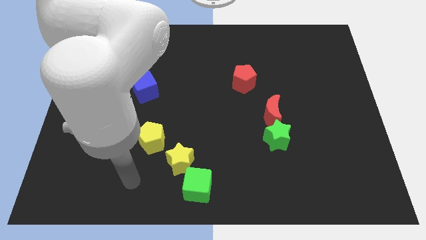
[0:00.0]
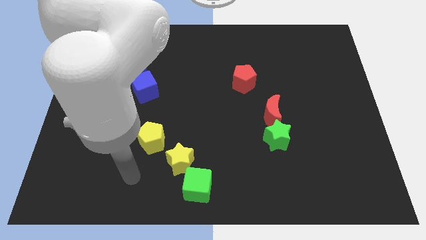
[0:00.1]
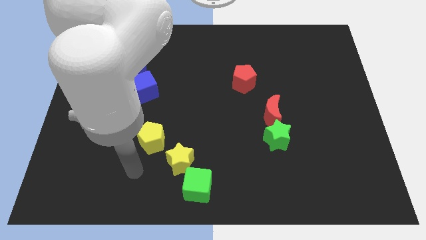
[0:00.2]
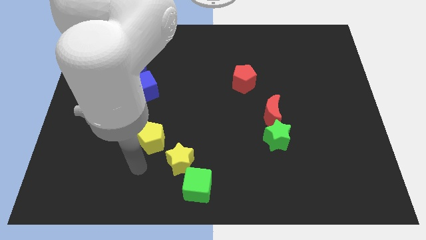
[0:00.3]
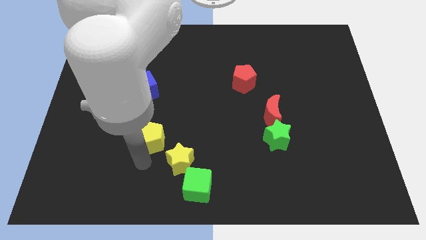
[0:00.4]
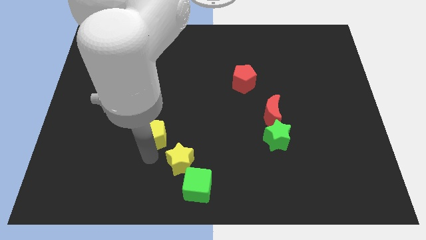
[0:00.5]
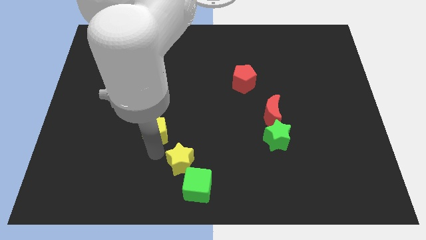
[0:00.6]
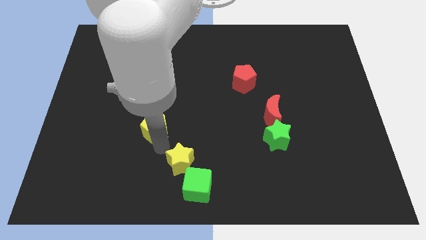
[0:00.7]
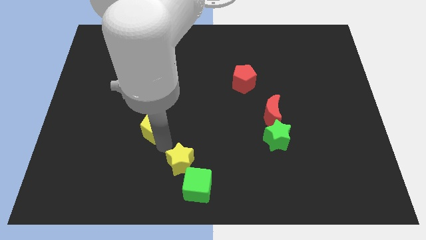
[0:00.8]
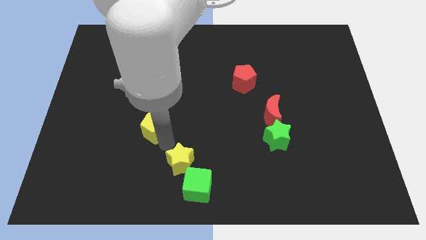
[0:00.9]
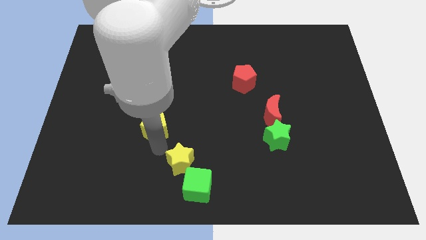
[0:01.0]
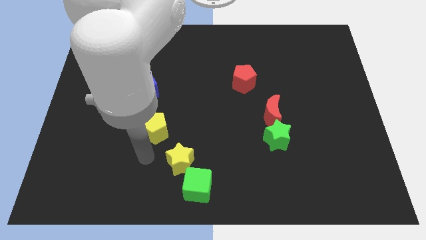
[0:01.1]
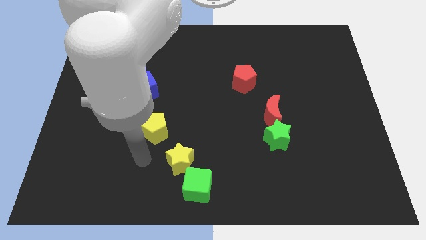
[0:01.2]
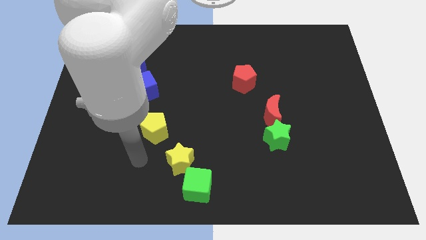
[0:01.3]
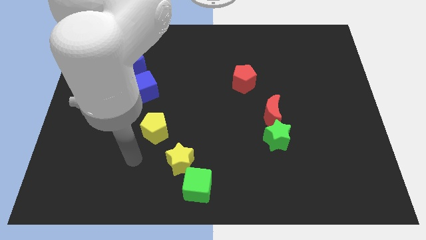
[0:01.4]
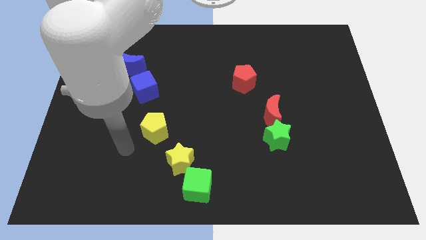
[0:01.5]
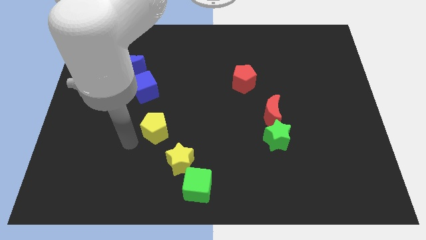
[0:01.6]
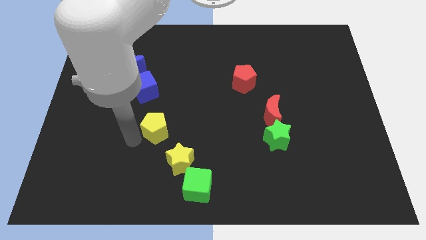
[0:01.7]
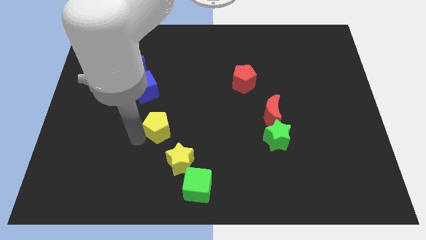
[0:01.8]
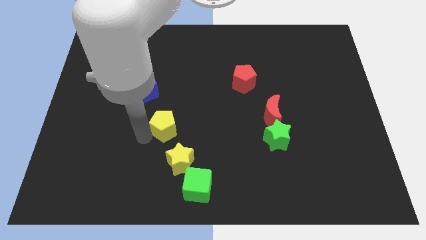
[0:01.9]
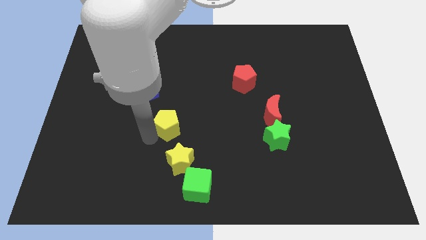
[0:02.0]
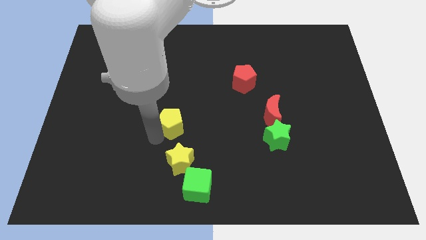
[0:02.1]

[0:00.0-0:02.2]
push the yellow pentagon up slightly to form a diagonal line with the other blocks

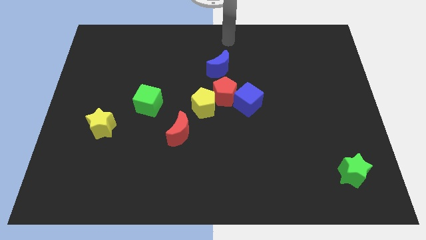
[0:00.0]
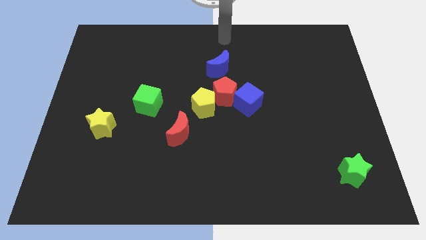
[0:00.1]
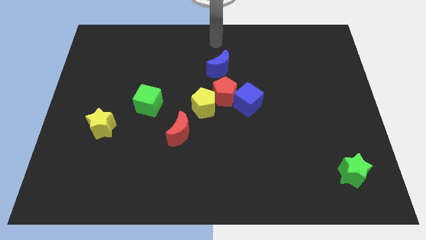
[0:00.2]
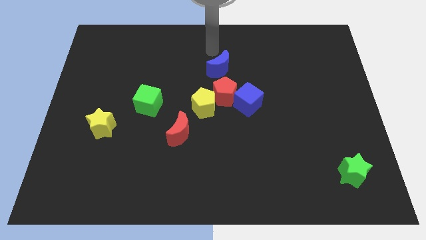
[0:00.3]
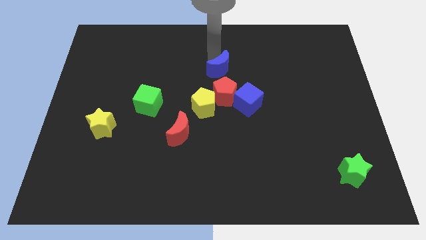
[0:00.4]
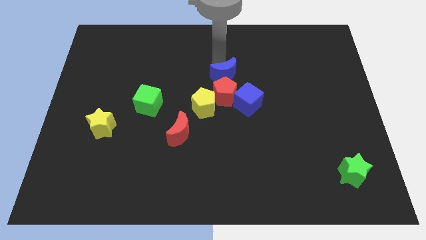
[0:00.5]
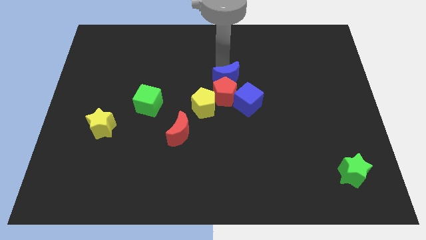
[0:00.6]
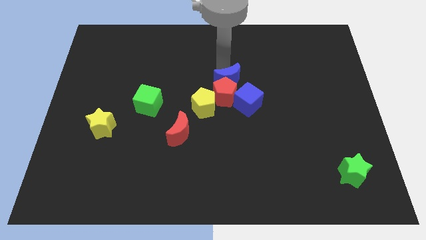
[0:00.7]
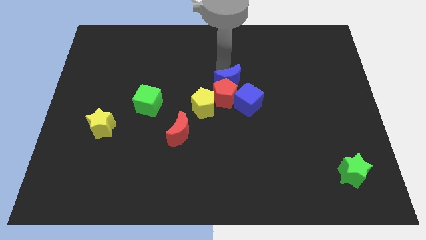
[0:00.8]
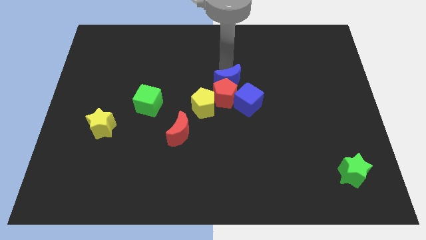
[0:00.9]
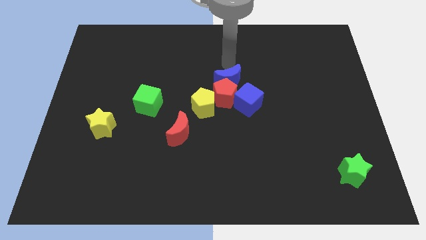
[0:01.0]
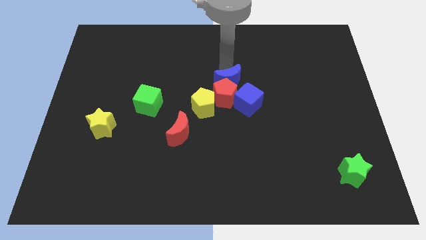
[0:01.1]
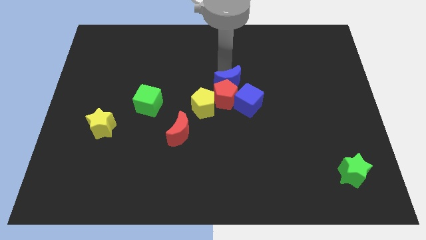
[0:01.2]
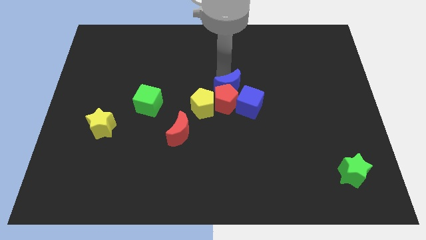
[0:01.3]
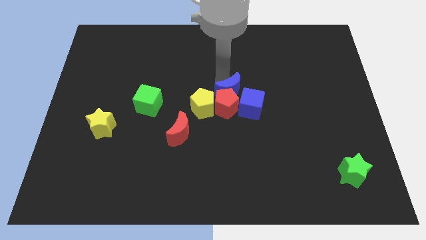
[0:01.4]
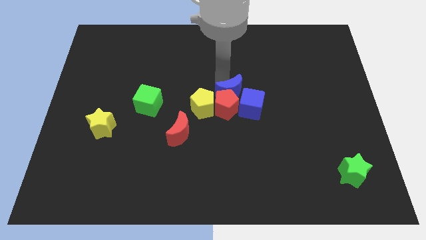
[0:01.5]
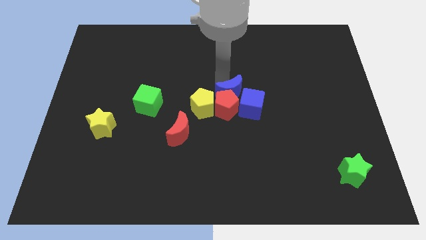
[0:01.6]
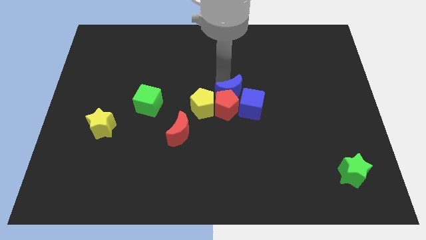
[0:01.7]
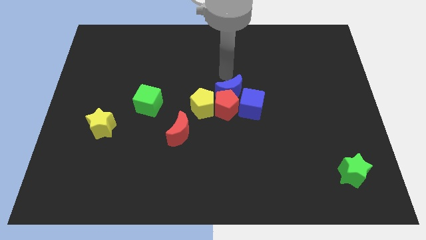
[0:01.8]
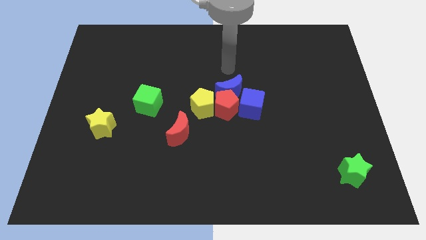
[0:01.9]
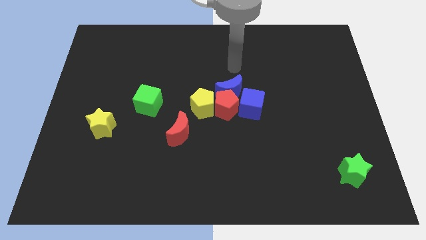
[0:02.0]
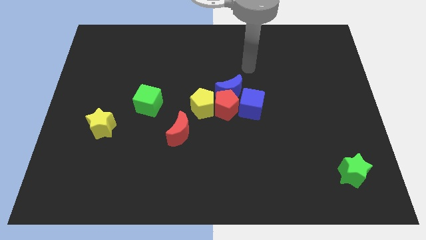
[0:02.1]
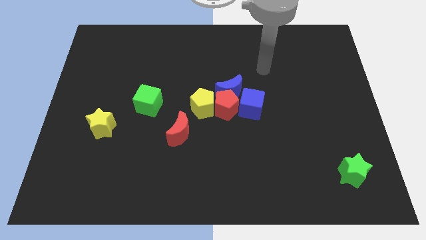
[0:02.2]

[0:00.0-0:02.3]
move the blue crescent into the red pentagon

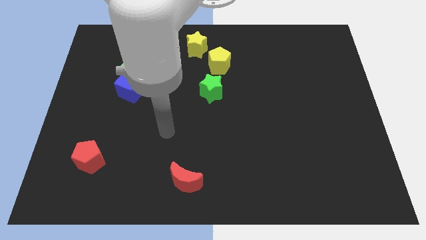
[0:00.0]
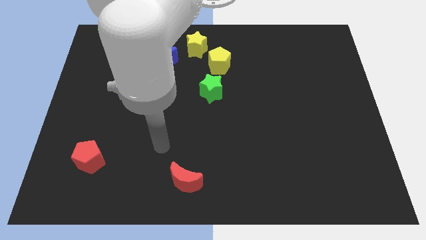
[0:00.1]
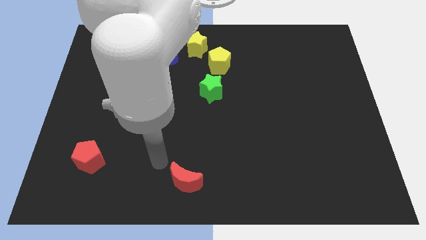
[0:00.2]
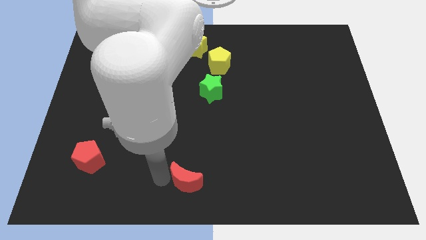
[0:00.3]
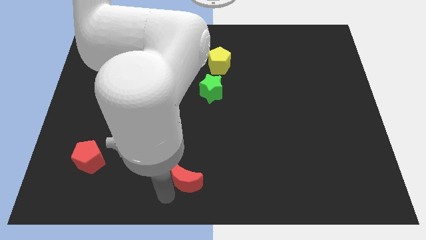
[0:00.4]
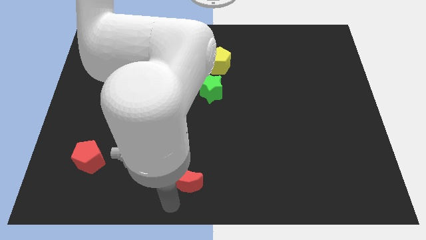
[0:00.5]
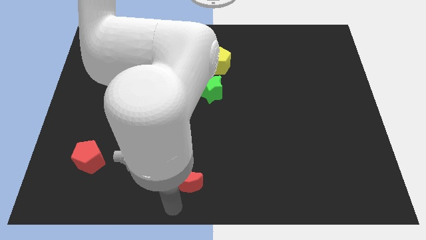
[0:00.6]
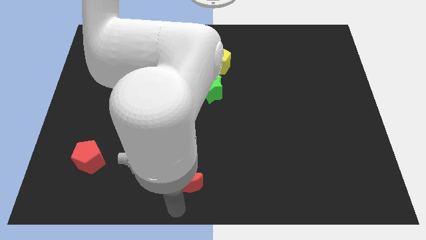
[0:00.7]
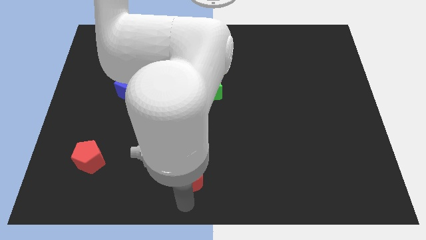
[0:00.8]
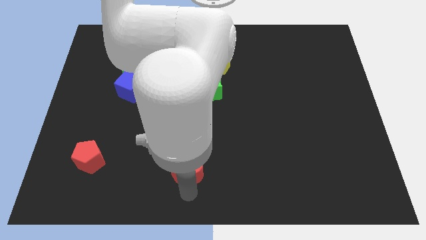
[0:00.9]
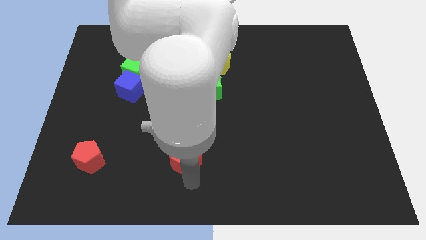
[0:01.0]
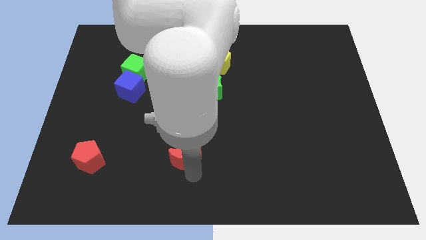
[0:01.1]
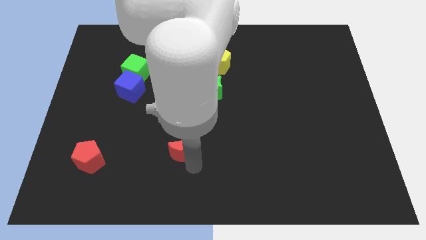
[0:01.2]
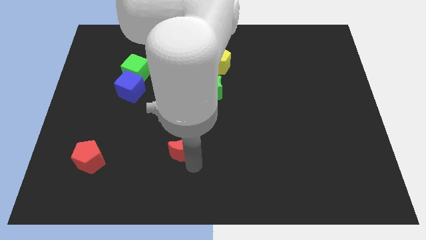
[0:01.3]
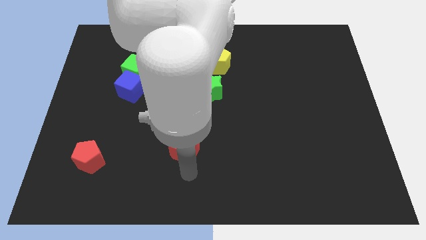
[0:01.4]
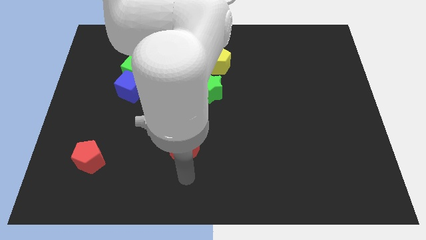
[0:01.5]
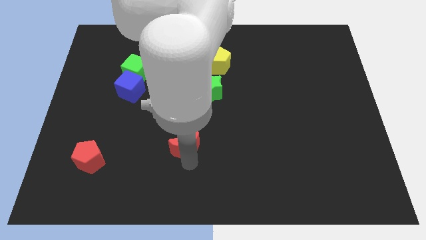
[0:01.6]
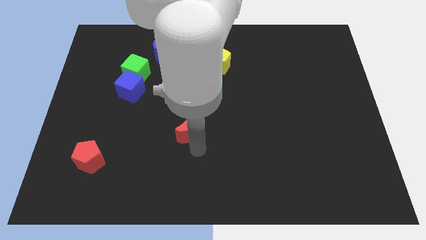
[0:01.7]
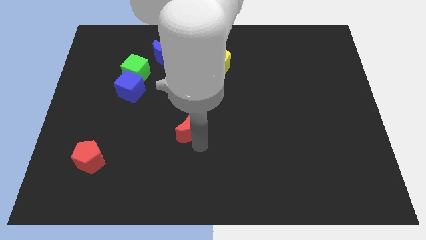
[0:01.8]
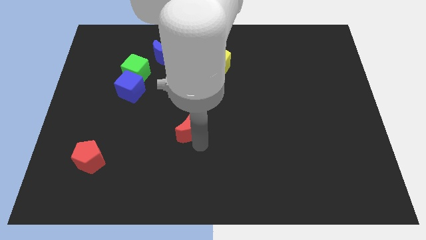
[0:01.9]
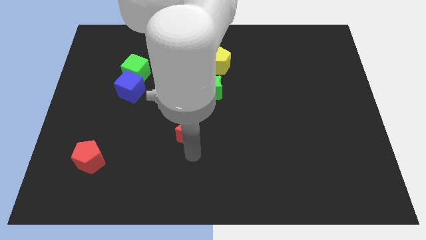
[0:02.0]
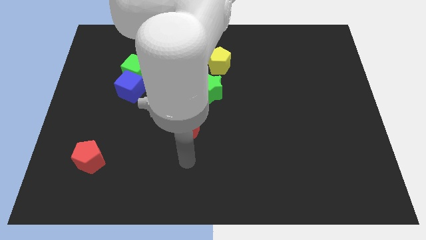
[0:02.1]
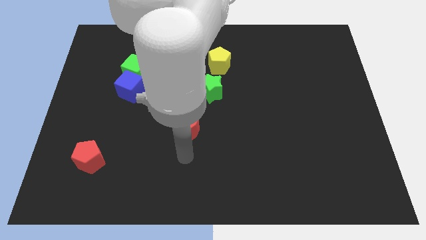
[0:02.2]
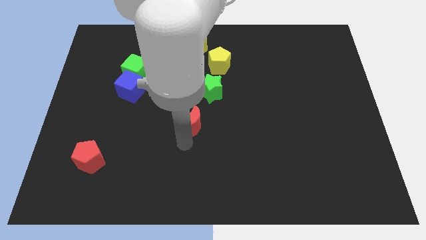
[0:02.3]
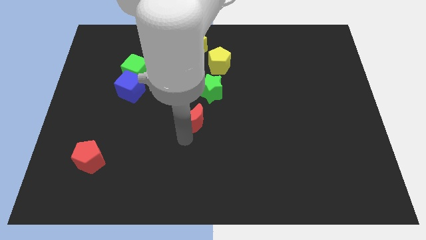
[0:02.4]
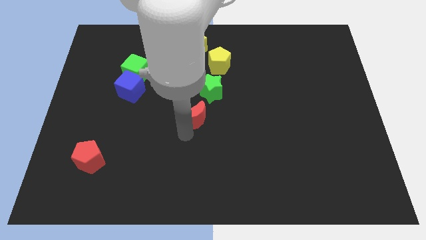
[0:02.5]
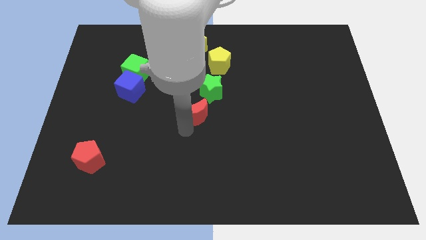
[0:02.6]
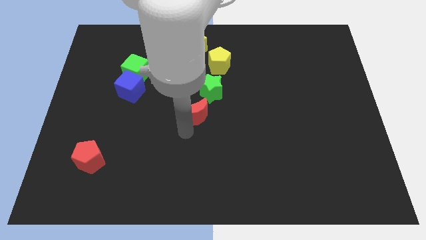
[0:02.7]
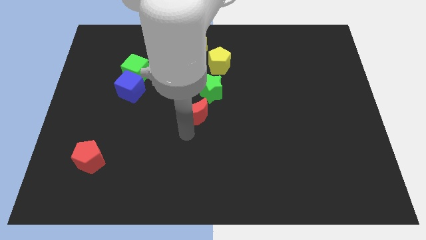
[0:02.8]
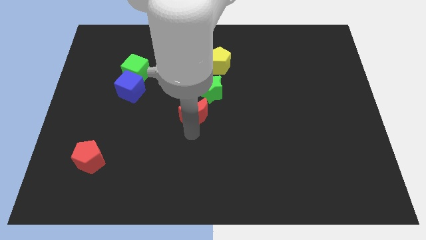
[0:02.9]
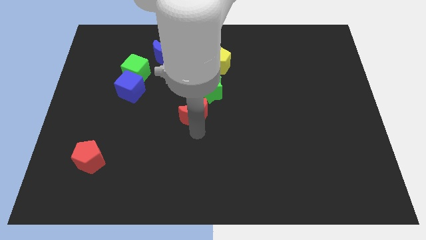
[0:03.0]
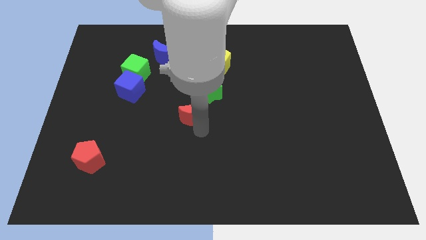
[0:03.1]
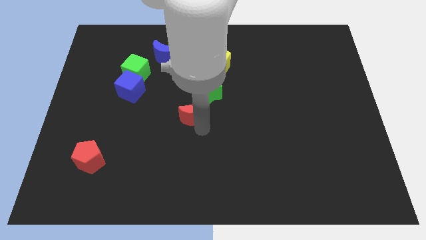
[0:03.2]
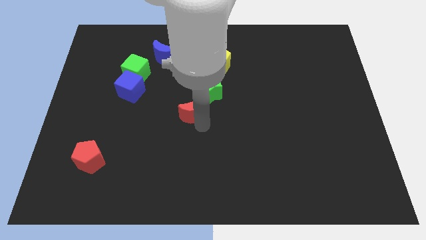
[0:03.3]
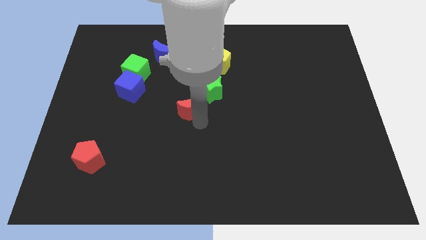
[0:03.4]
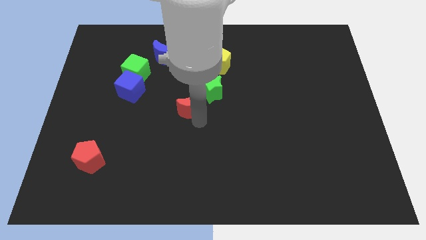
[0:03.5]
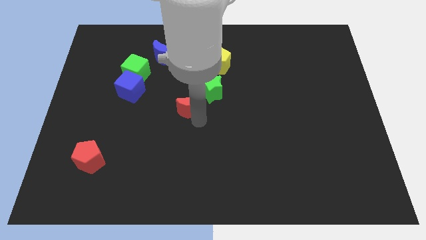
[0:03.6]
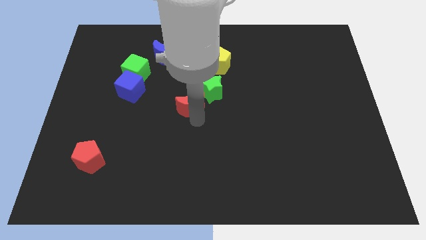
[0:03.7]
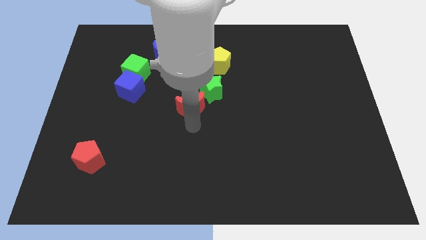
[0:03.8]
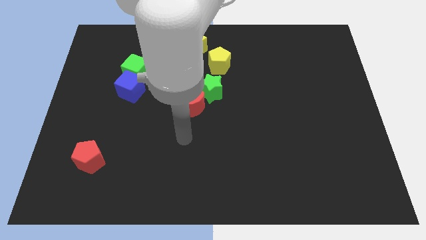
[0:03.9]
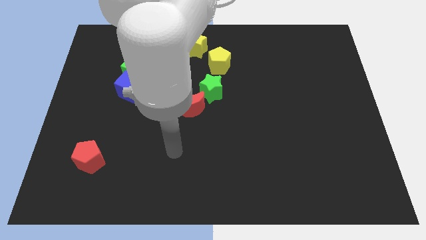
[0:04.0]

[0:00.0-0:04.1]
push the red moon to the bottom side of the green star

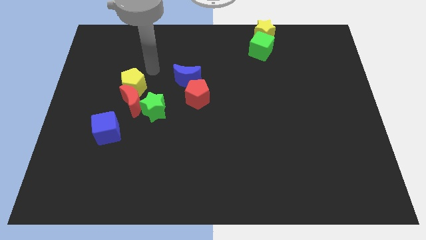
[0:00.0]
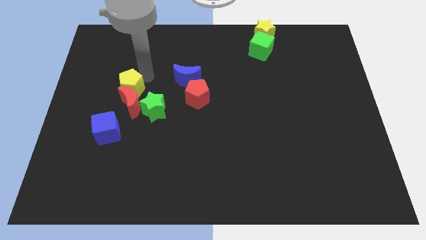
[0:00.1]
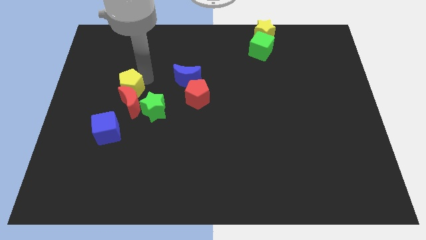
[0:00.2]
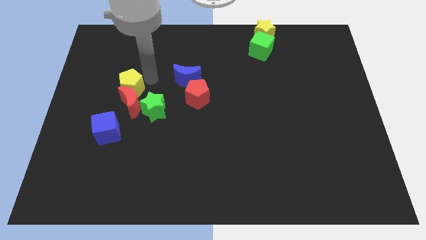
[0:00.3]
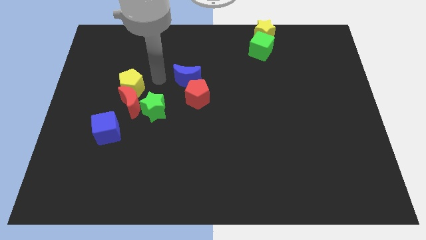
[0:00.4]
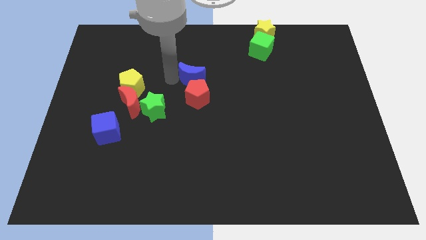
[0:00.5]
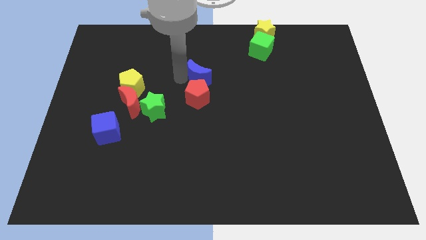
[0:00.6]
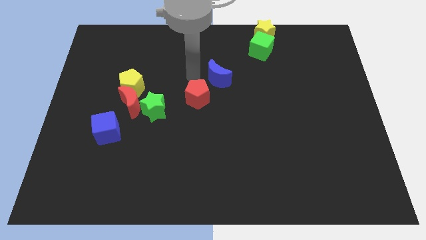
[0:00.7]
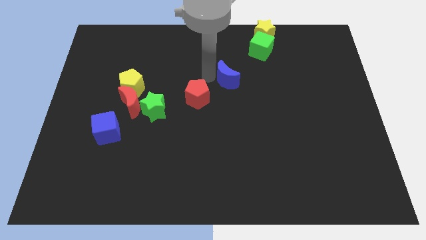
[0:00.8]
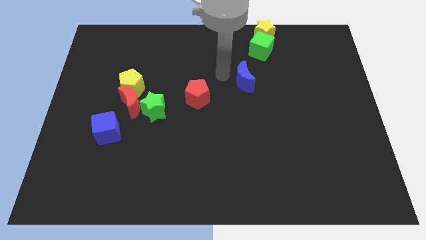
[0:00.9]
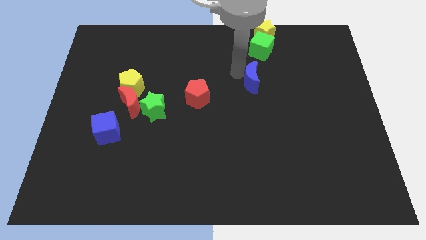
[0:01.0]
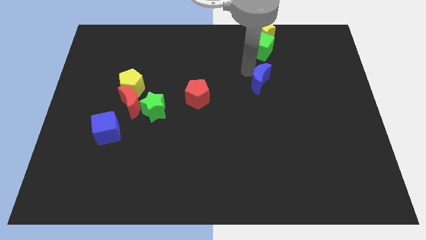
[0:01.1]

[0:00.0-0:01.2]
push the blue moon towards the center right of the board
